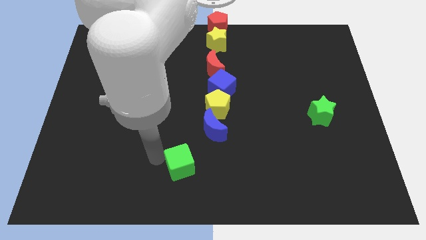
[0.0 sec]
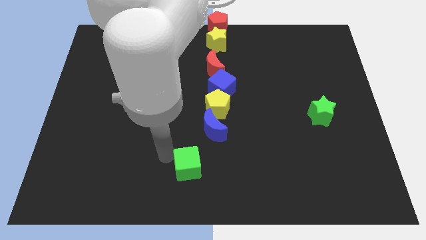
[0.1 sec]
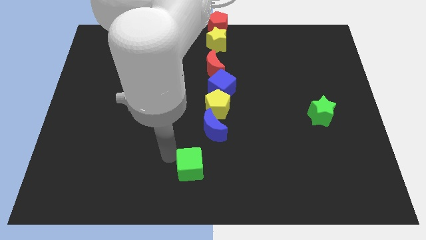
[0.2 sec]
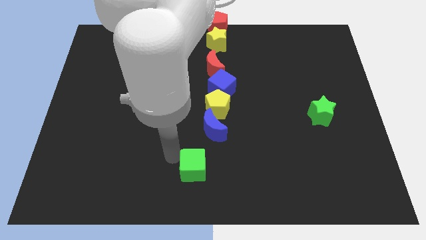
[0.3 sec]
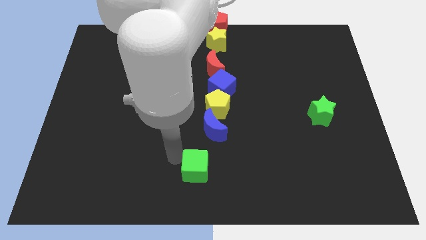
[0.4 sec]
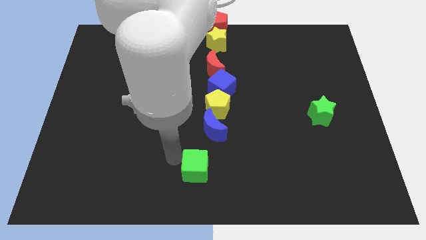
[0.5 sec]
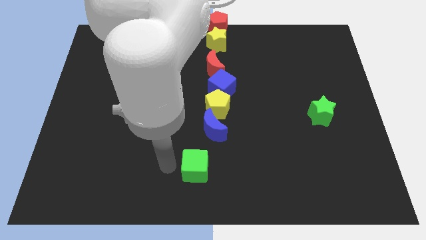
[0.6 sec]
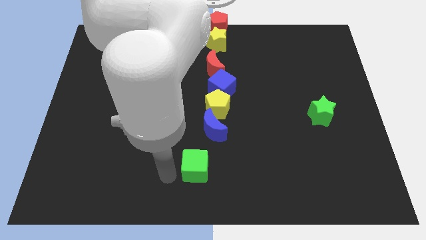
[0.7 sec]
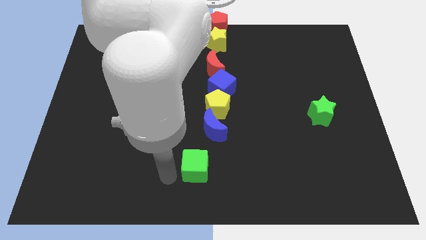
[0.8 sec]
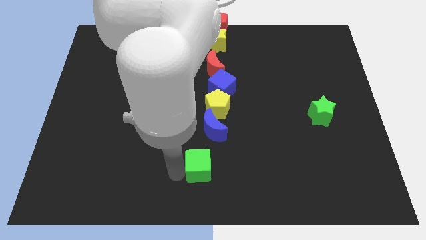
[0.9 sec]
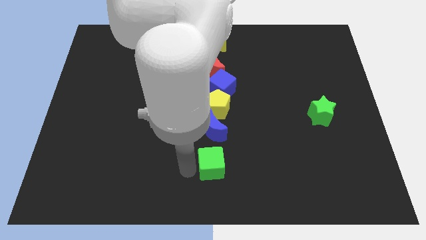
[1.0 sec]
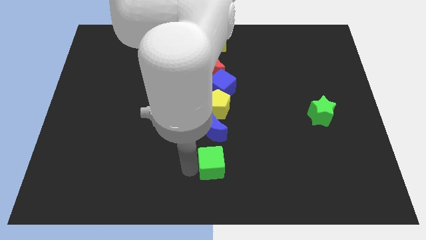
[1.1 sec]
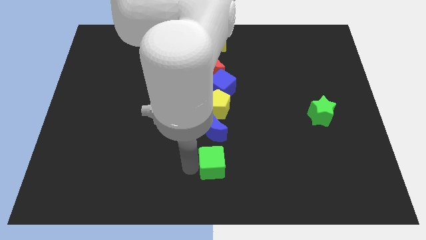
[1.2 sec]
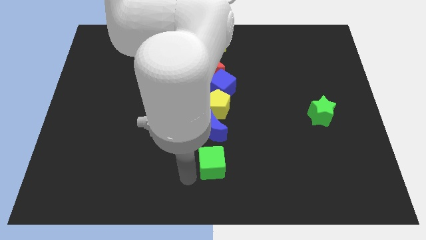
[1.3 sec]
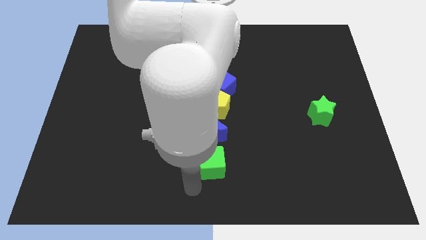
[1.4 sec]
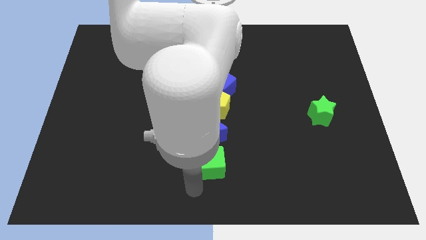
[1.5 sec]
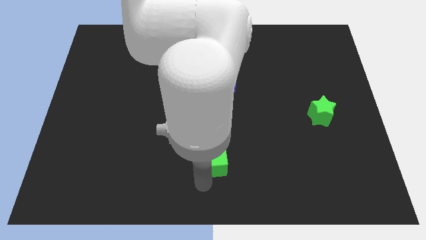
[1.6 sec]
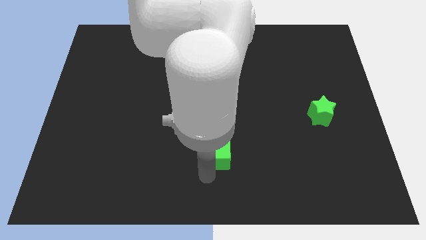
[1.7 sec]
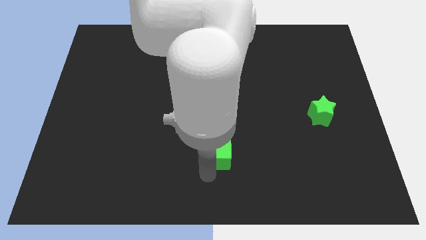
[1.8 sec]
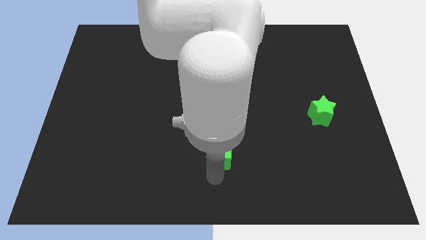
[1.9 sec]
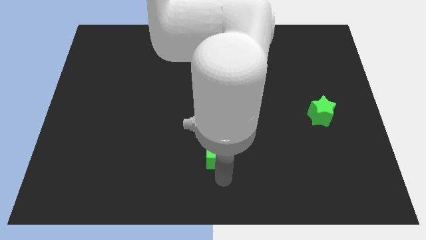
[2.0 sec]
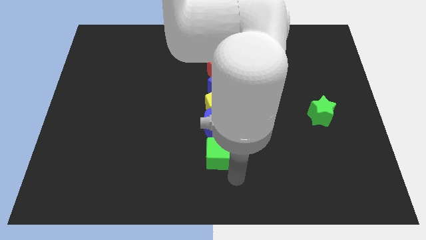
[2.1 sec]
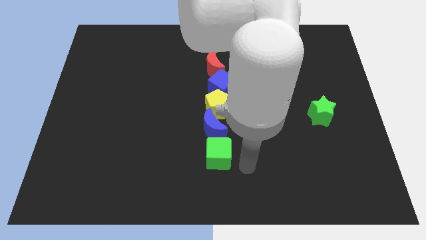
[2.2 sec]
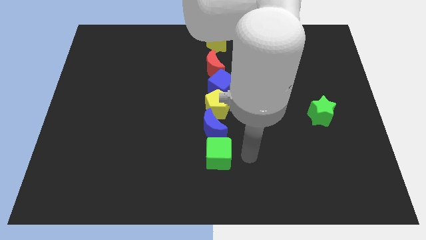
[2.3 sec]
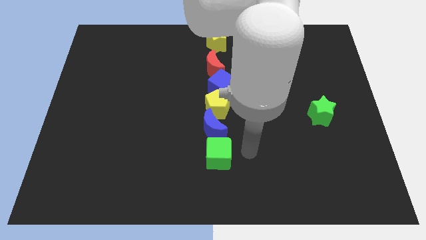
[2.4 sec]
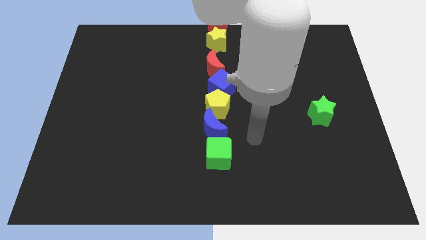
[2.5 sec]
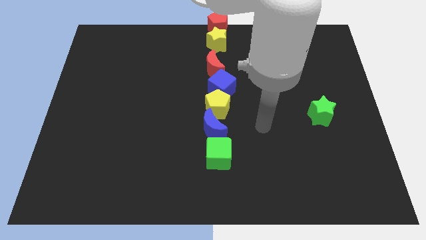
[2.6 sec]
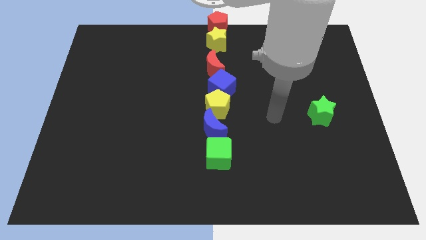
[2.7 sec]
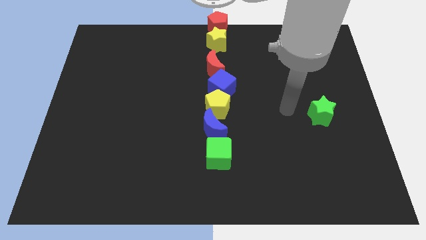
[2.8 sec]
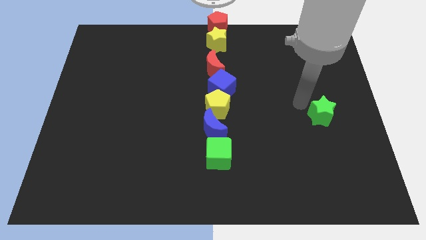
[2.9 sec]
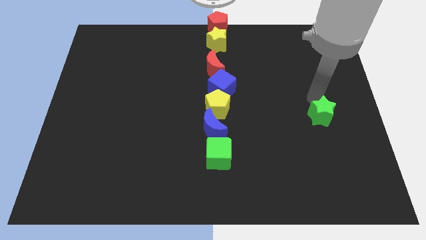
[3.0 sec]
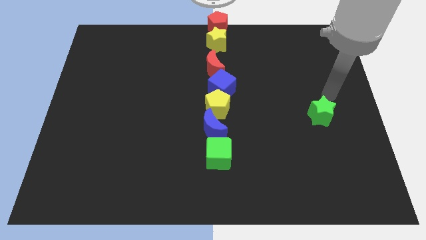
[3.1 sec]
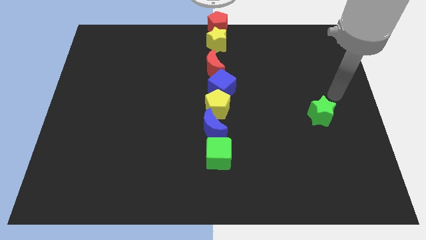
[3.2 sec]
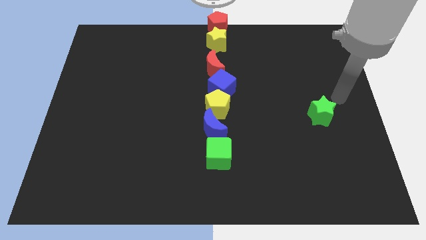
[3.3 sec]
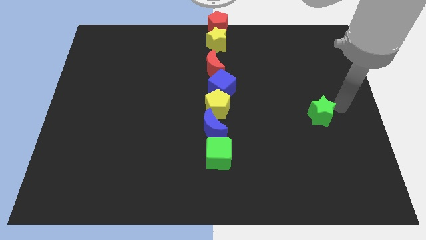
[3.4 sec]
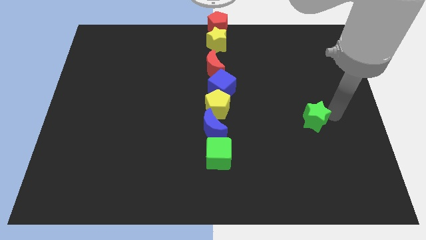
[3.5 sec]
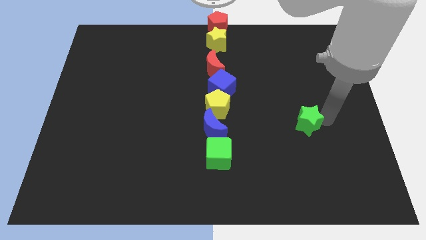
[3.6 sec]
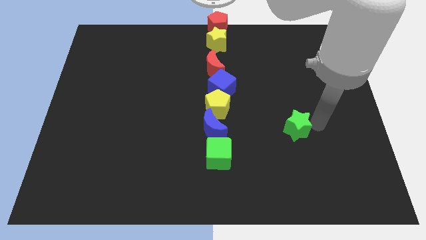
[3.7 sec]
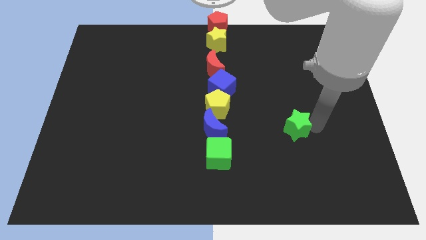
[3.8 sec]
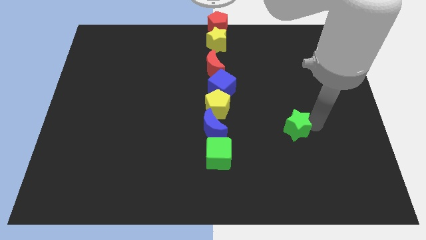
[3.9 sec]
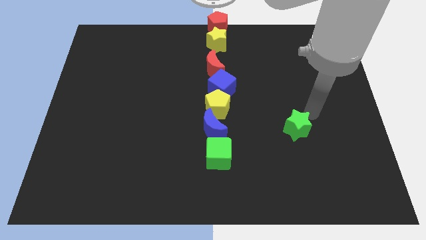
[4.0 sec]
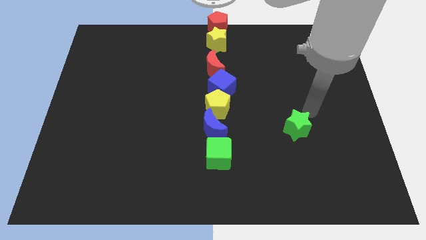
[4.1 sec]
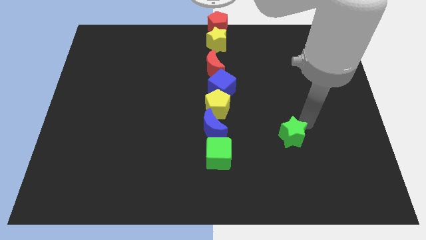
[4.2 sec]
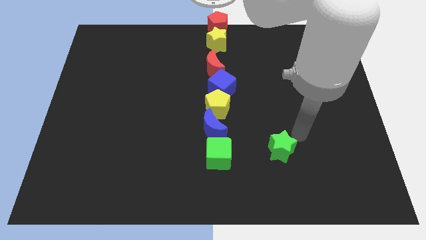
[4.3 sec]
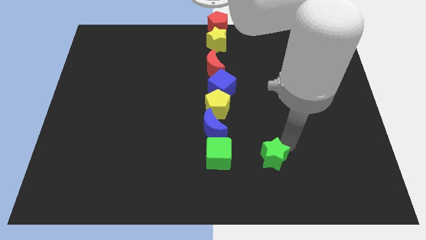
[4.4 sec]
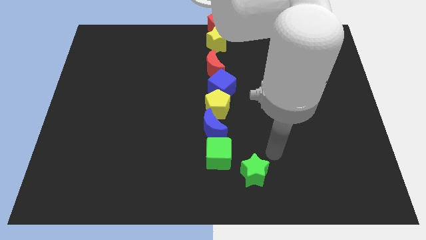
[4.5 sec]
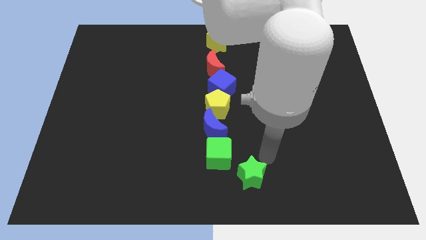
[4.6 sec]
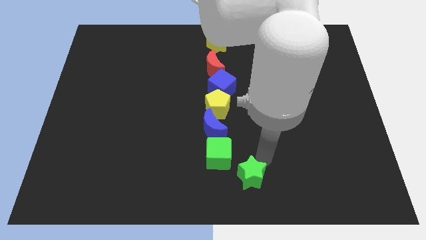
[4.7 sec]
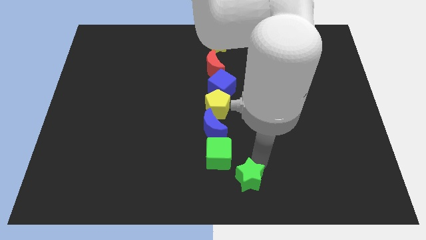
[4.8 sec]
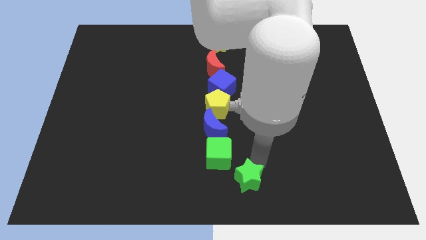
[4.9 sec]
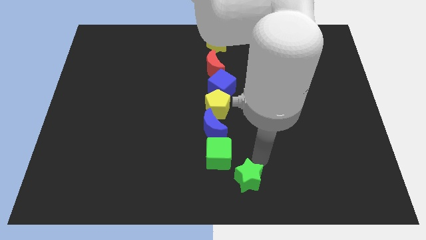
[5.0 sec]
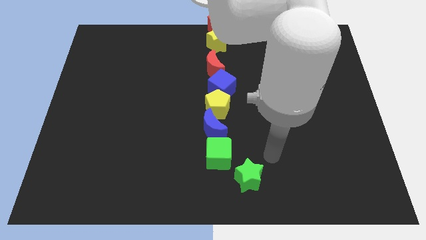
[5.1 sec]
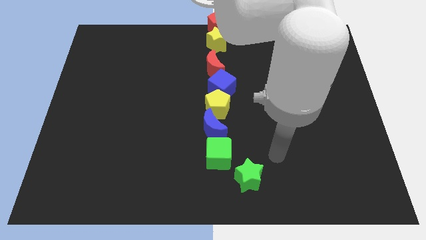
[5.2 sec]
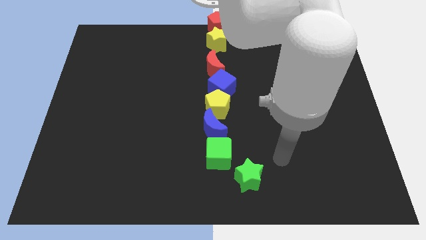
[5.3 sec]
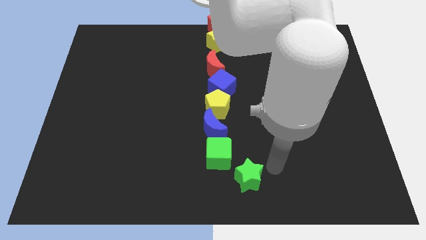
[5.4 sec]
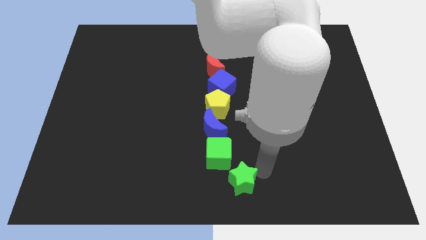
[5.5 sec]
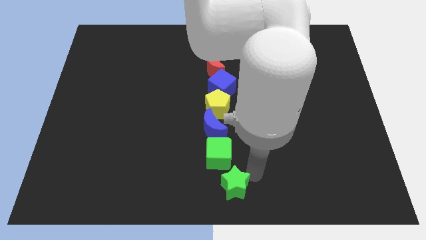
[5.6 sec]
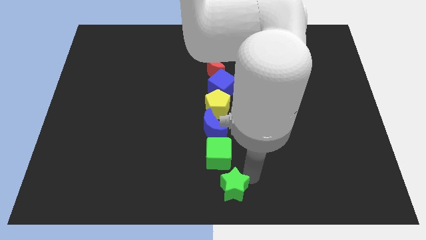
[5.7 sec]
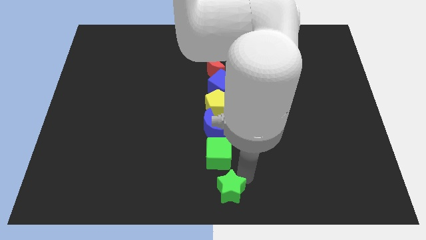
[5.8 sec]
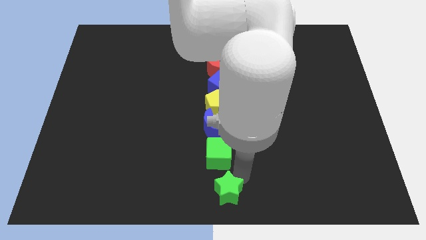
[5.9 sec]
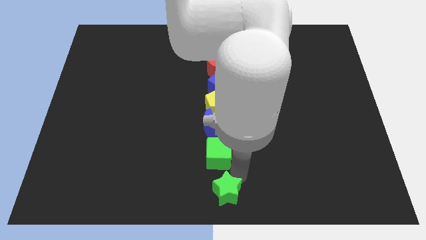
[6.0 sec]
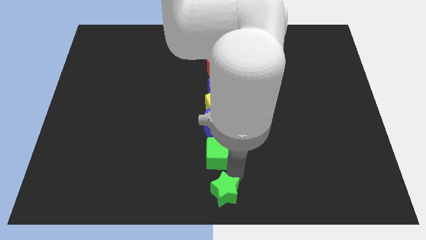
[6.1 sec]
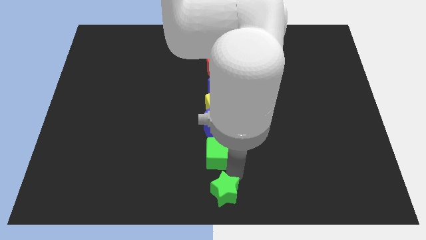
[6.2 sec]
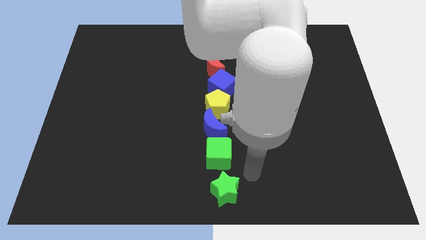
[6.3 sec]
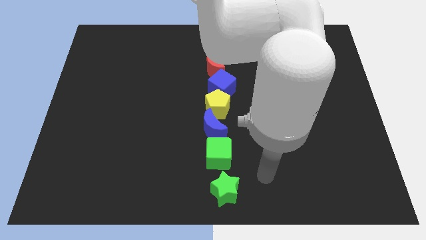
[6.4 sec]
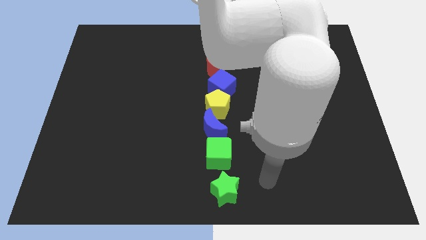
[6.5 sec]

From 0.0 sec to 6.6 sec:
move the green star below to the green cube

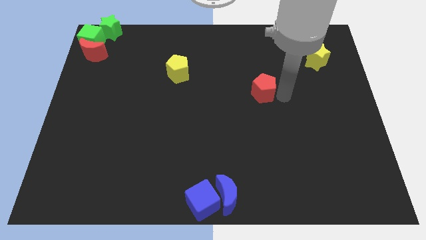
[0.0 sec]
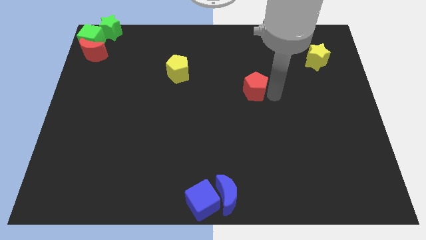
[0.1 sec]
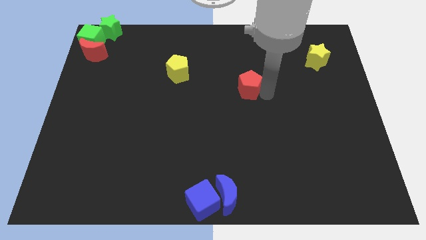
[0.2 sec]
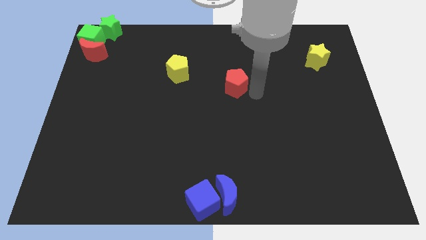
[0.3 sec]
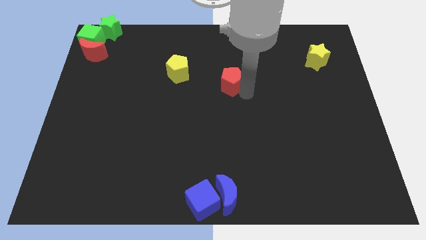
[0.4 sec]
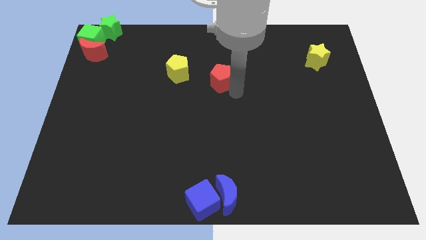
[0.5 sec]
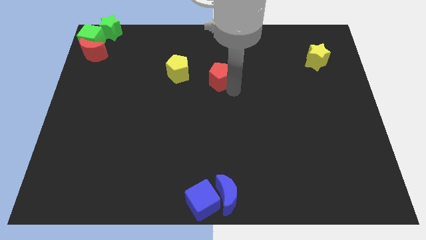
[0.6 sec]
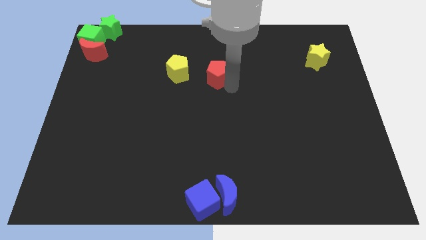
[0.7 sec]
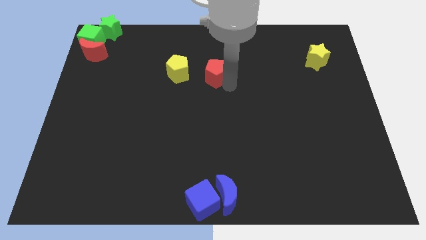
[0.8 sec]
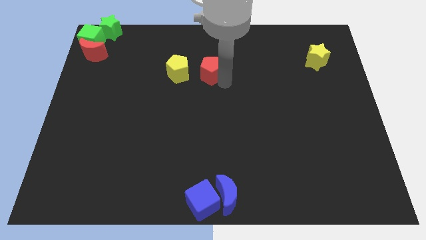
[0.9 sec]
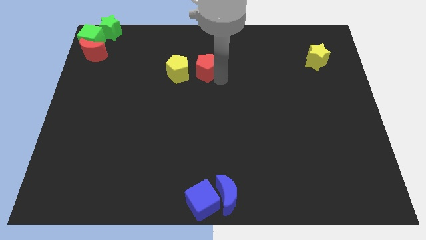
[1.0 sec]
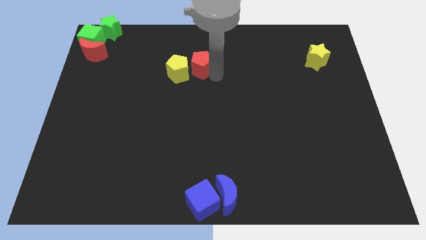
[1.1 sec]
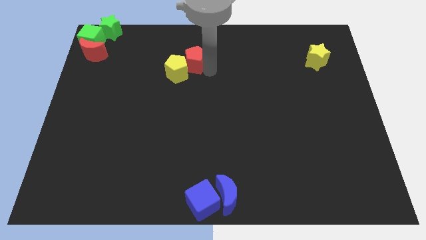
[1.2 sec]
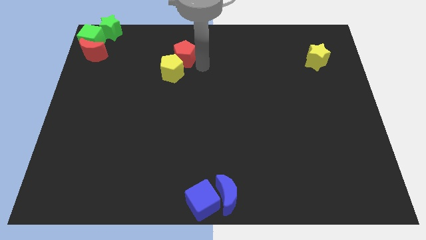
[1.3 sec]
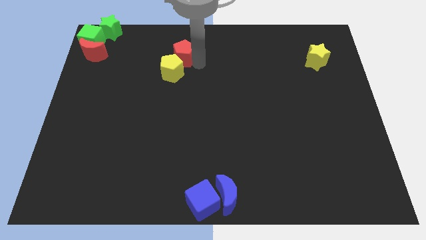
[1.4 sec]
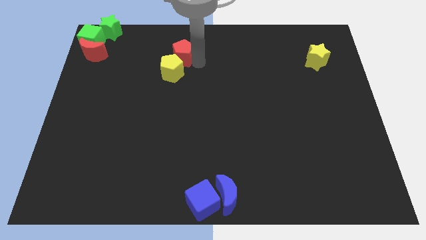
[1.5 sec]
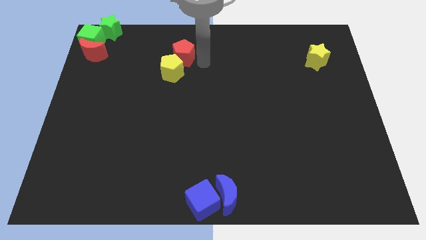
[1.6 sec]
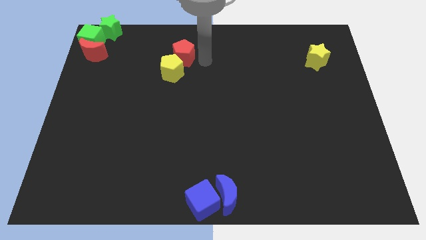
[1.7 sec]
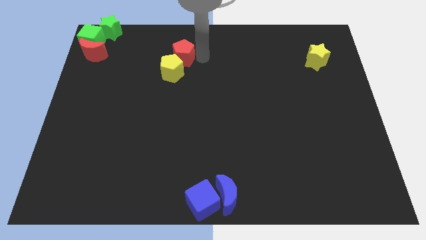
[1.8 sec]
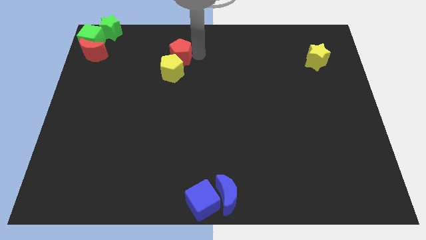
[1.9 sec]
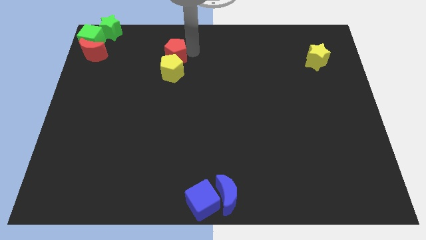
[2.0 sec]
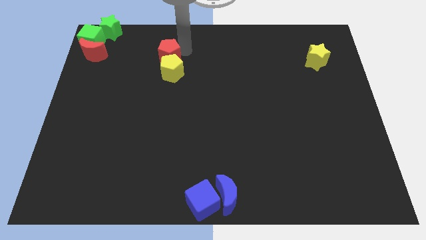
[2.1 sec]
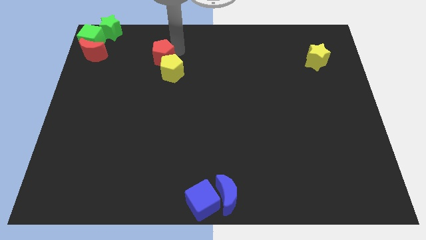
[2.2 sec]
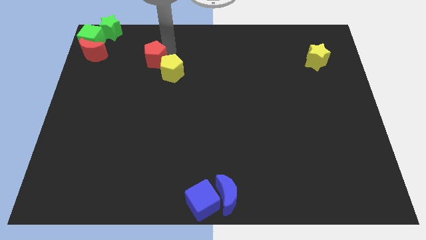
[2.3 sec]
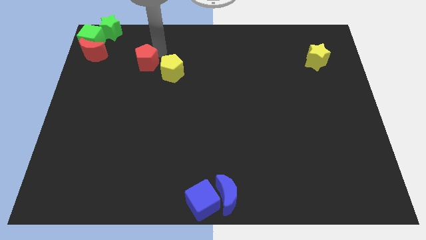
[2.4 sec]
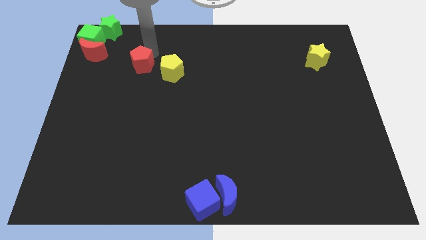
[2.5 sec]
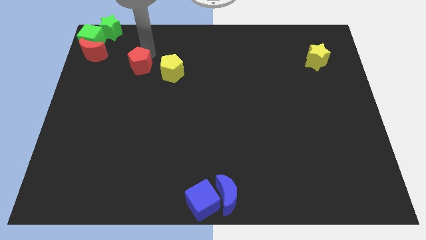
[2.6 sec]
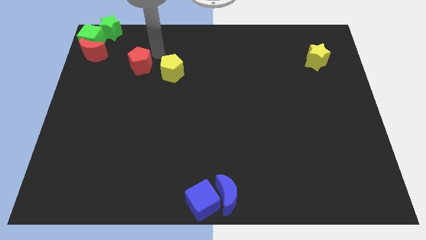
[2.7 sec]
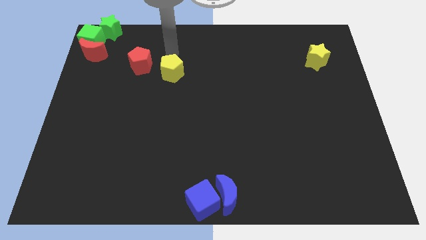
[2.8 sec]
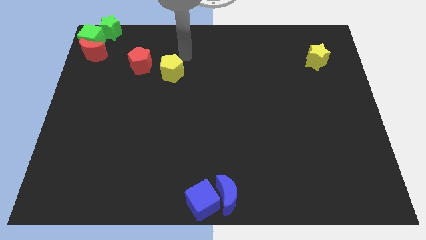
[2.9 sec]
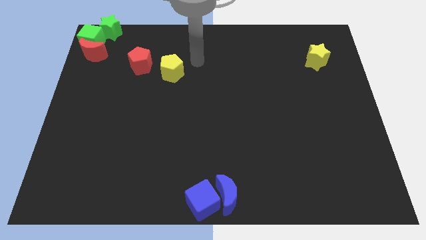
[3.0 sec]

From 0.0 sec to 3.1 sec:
slide red pentagon to top left of yellow pentagon
